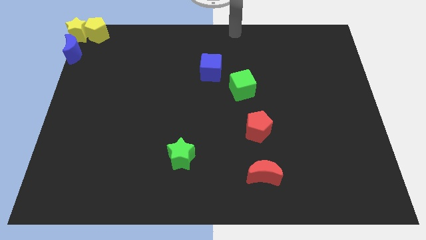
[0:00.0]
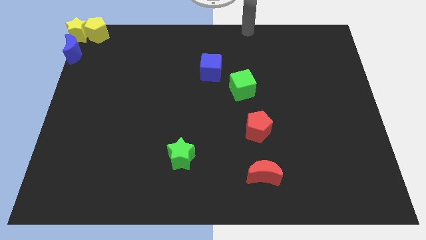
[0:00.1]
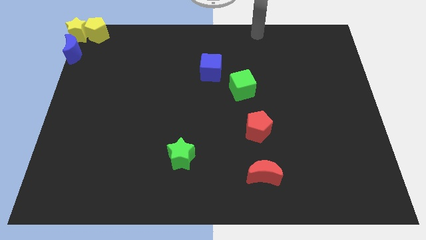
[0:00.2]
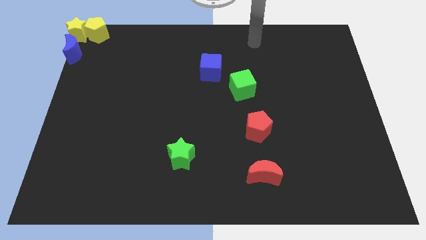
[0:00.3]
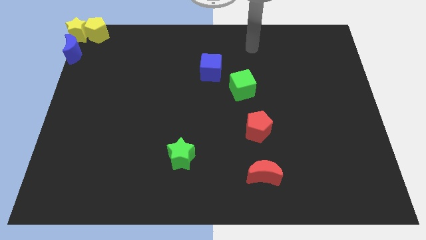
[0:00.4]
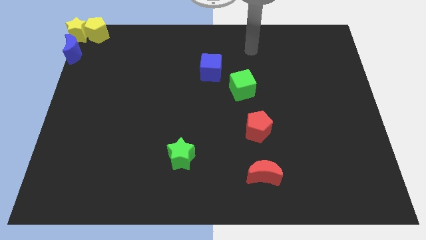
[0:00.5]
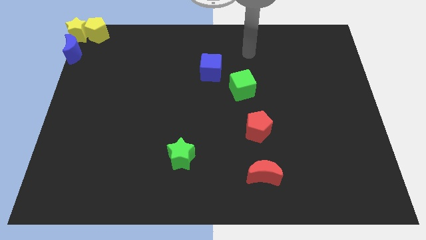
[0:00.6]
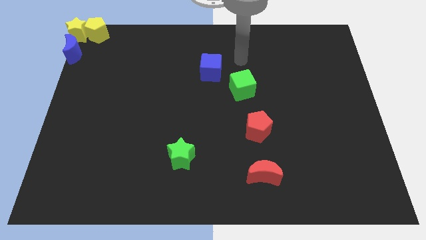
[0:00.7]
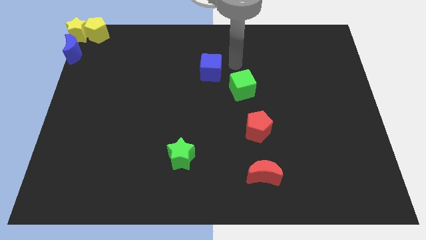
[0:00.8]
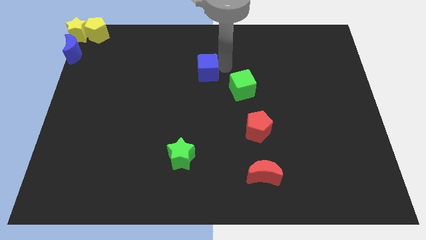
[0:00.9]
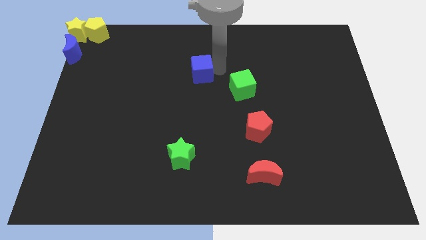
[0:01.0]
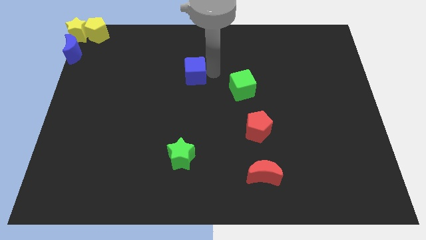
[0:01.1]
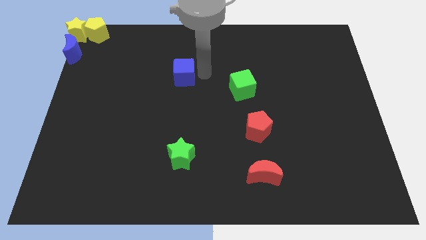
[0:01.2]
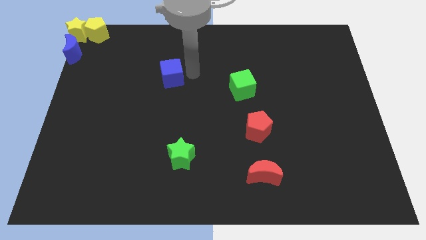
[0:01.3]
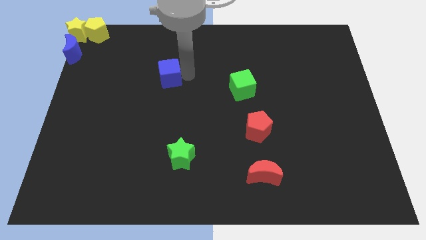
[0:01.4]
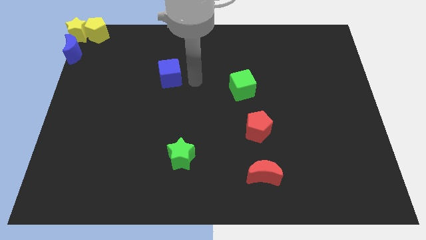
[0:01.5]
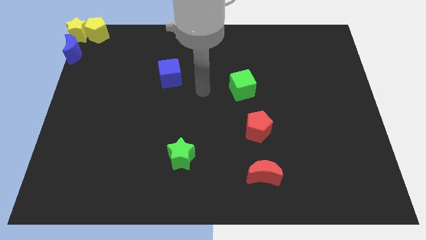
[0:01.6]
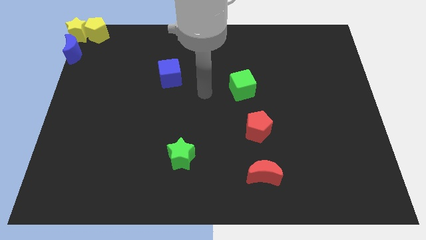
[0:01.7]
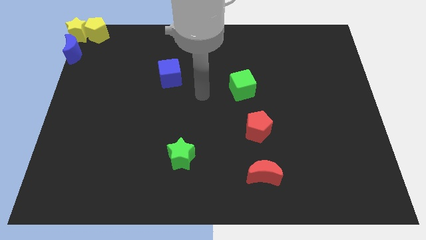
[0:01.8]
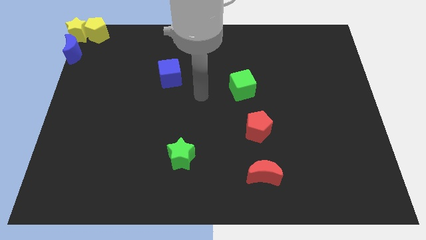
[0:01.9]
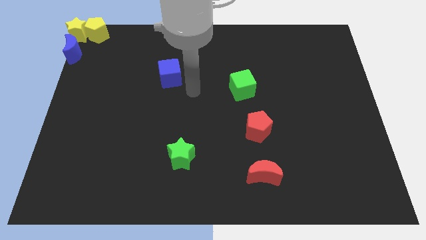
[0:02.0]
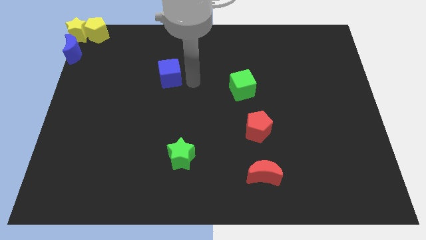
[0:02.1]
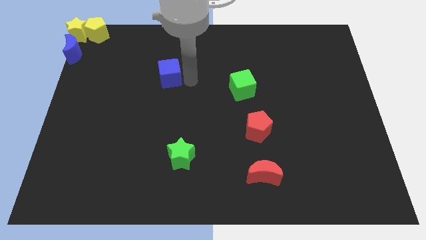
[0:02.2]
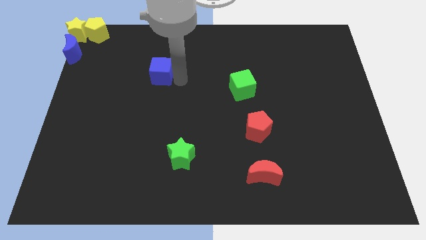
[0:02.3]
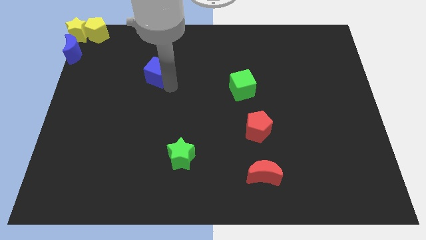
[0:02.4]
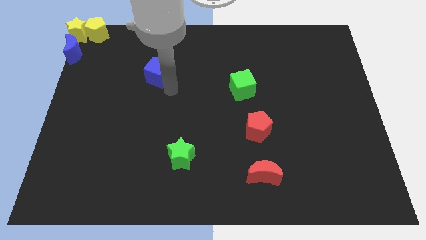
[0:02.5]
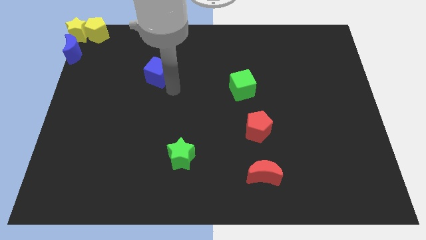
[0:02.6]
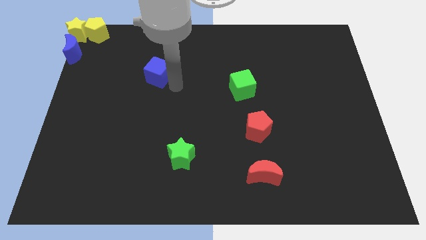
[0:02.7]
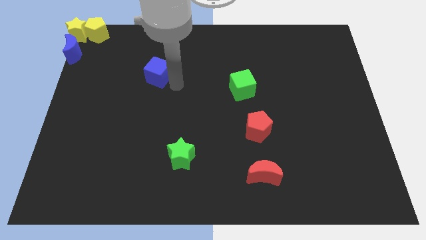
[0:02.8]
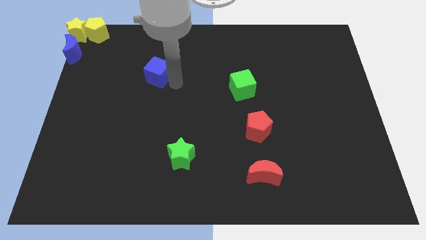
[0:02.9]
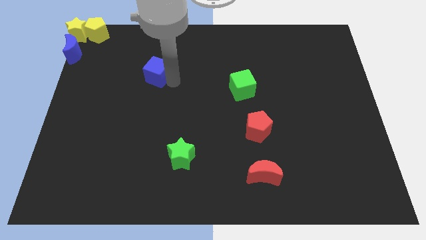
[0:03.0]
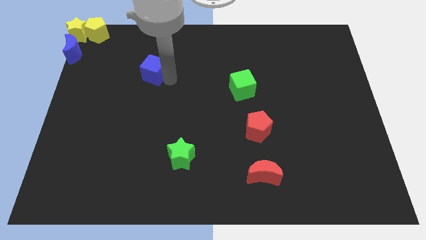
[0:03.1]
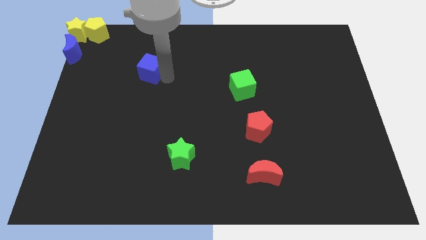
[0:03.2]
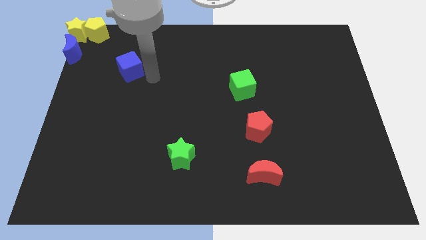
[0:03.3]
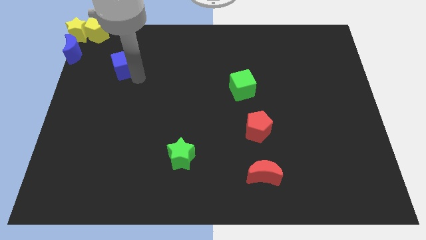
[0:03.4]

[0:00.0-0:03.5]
drag the blue cube towards the blue crescent

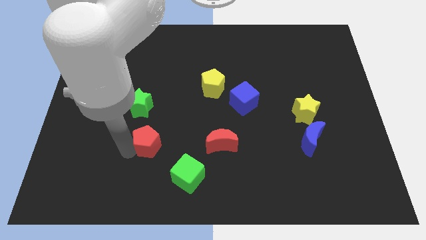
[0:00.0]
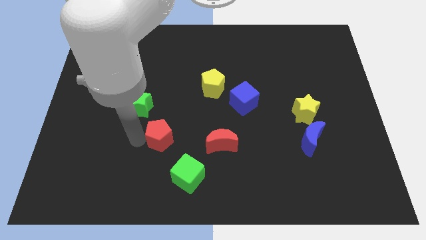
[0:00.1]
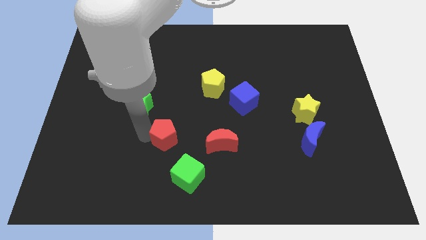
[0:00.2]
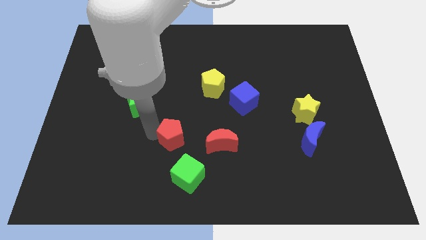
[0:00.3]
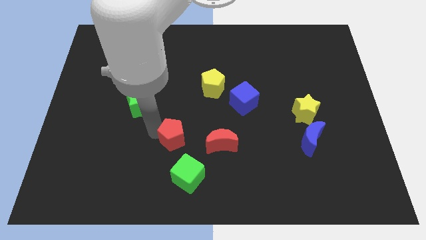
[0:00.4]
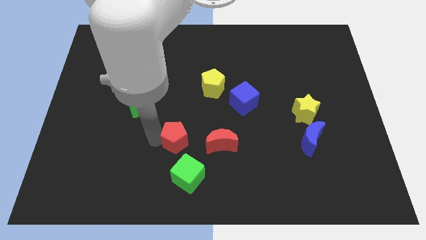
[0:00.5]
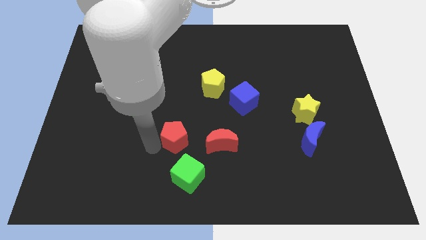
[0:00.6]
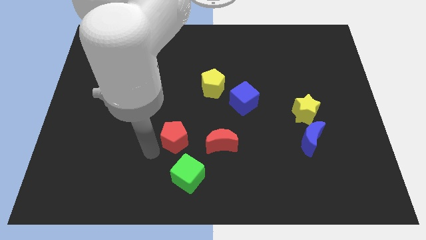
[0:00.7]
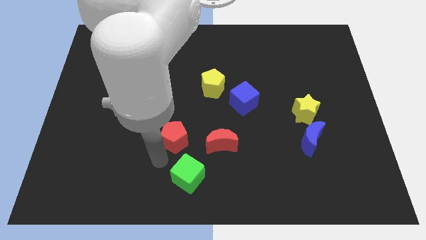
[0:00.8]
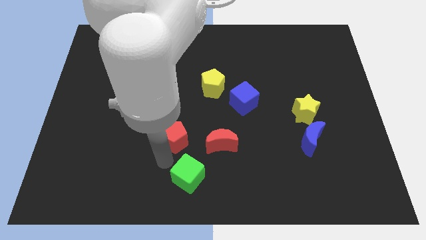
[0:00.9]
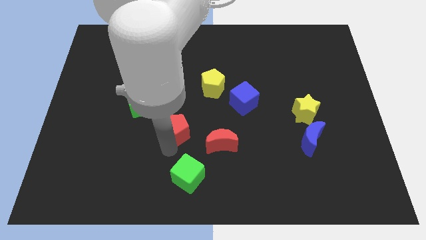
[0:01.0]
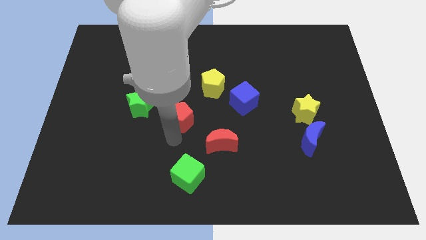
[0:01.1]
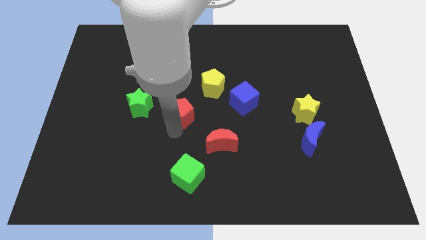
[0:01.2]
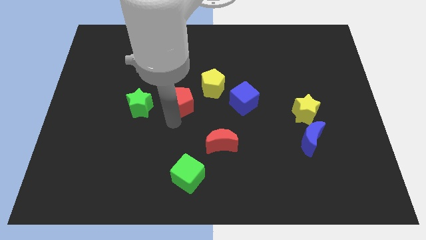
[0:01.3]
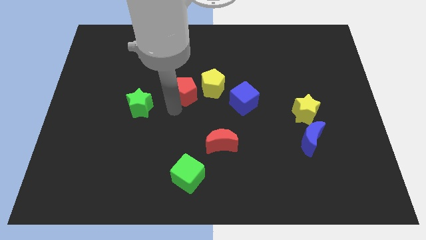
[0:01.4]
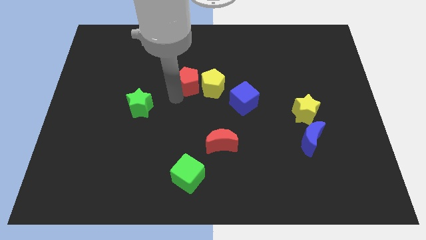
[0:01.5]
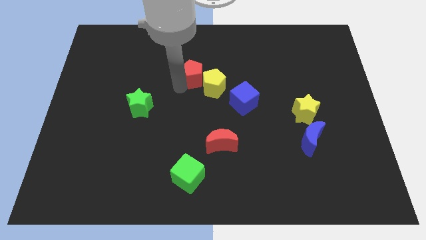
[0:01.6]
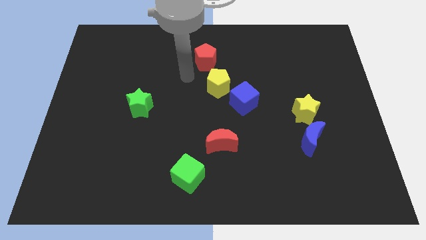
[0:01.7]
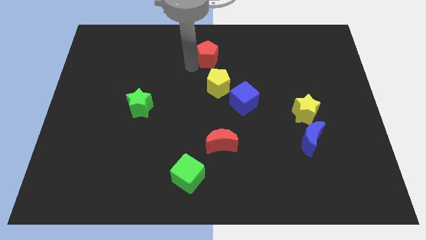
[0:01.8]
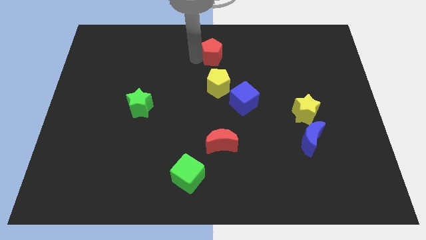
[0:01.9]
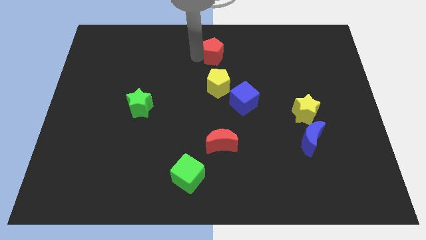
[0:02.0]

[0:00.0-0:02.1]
place the red pentagon above yellow pentagon

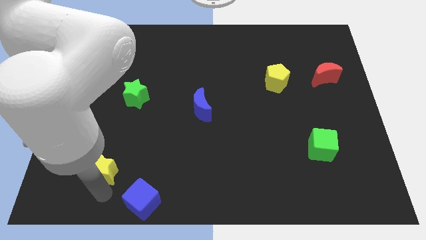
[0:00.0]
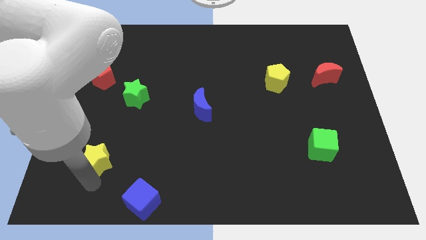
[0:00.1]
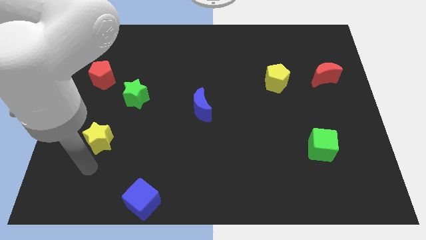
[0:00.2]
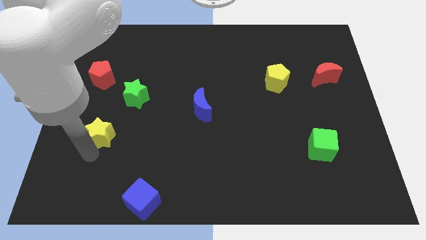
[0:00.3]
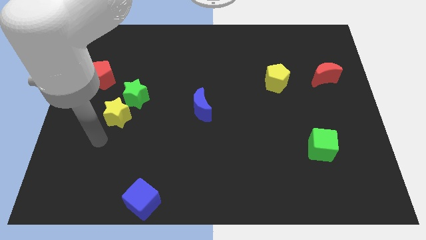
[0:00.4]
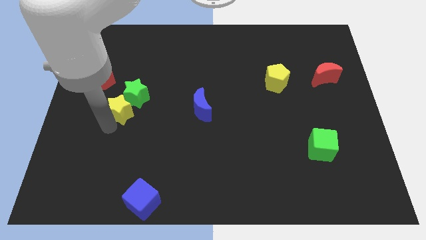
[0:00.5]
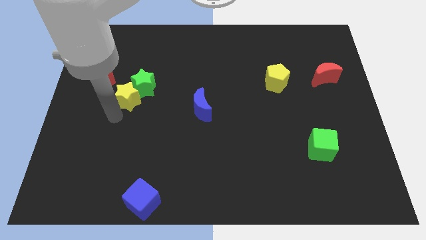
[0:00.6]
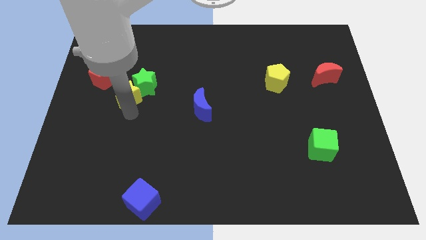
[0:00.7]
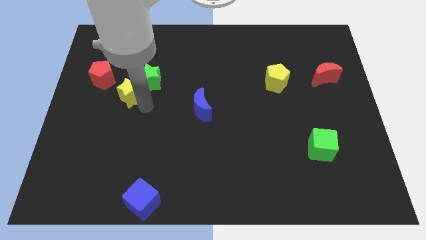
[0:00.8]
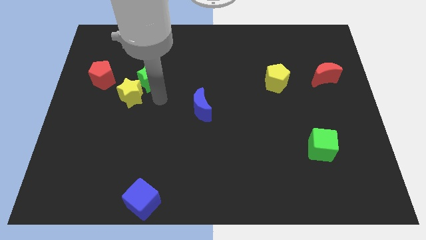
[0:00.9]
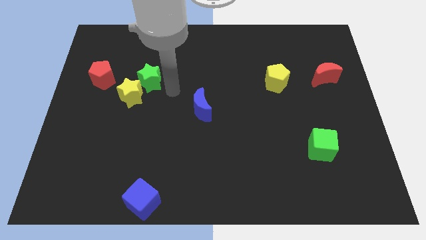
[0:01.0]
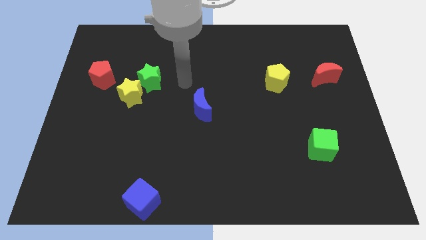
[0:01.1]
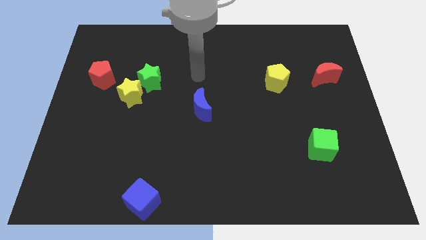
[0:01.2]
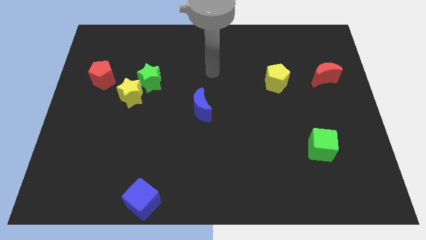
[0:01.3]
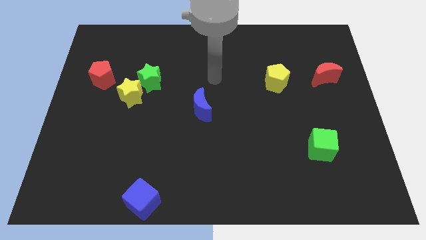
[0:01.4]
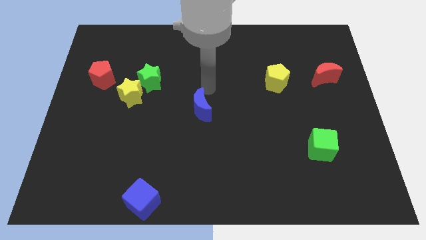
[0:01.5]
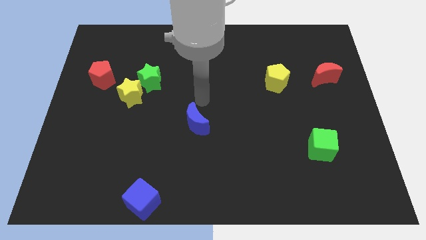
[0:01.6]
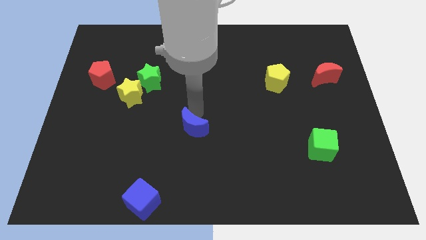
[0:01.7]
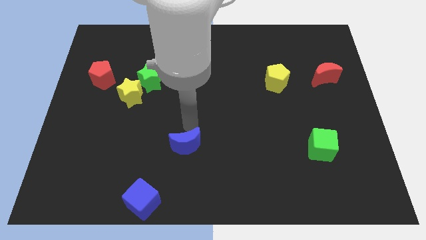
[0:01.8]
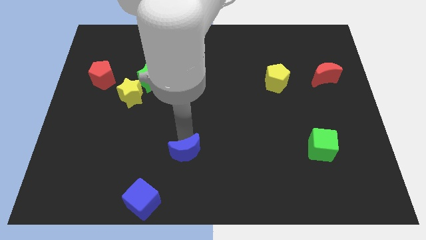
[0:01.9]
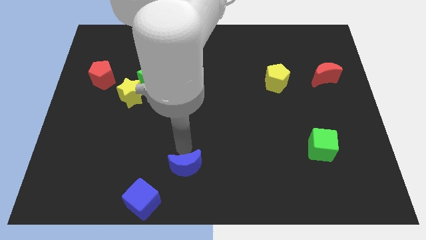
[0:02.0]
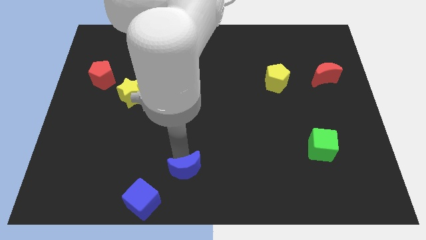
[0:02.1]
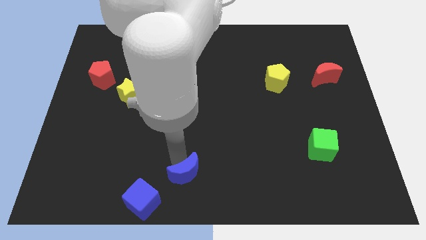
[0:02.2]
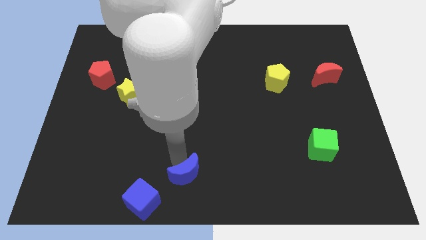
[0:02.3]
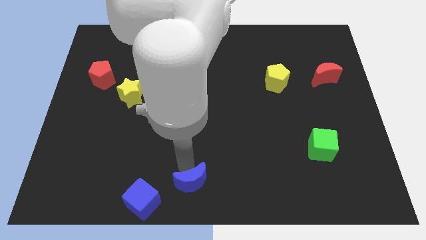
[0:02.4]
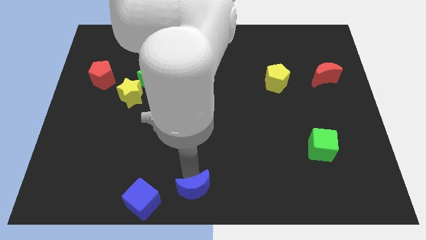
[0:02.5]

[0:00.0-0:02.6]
place the blue moon diagonally top right to the blue cube

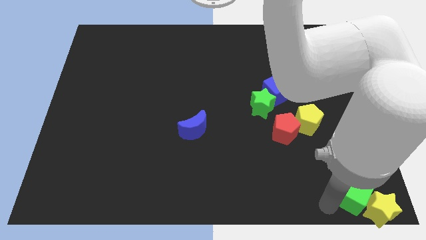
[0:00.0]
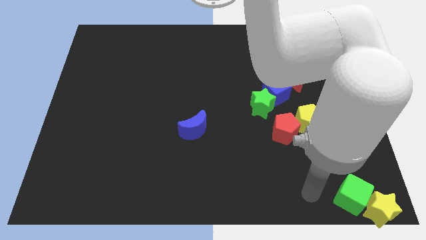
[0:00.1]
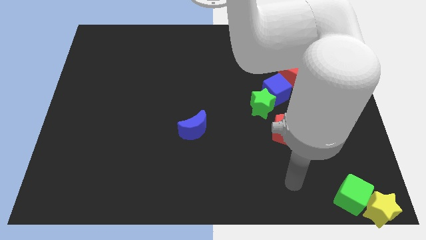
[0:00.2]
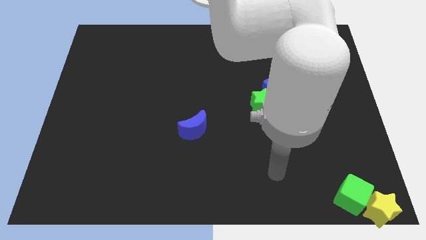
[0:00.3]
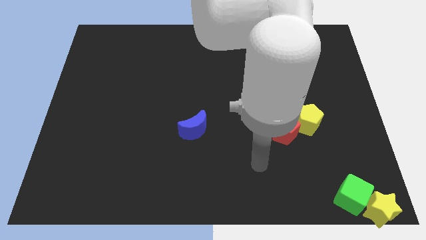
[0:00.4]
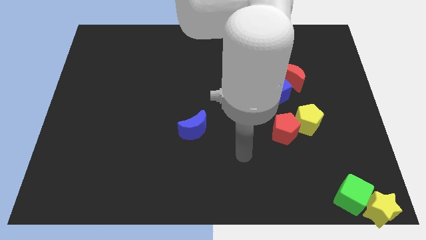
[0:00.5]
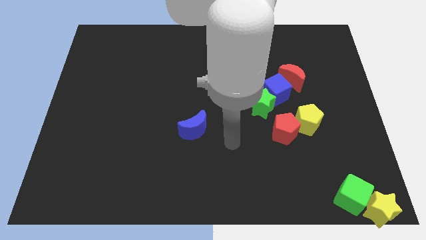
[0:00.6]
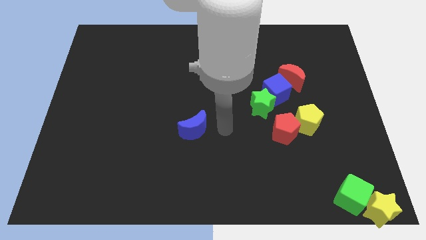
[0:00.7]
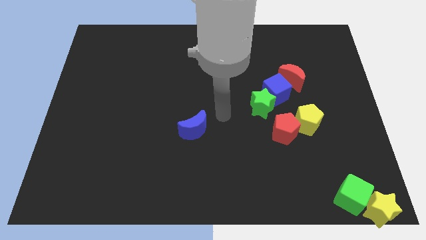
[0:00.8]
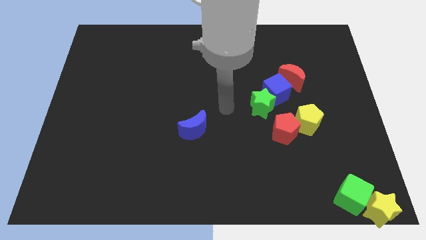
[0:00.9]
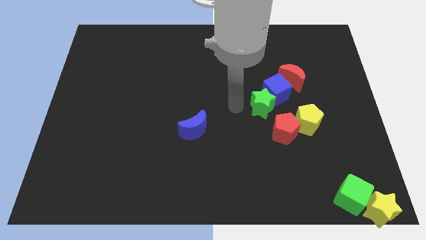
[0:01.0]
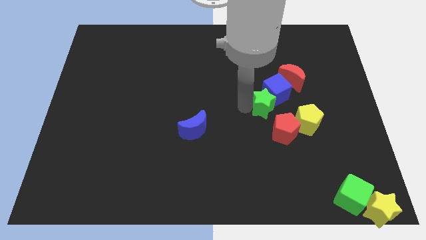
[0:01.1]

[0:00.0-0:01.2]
move your arm left to the green star
